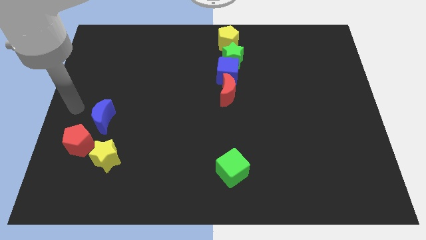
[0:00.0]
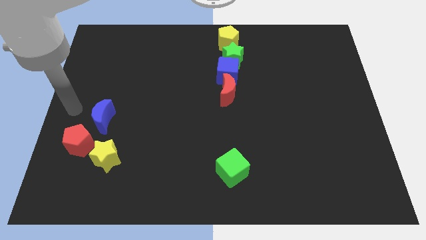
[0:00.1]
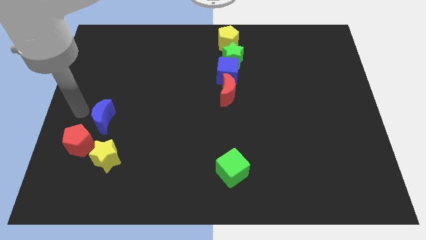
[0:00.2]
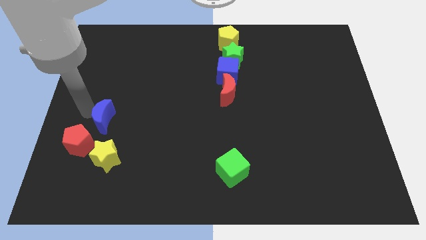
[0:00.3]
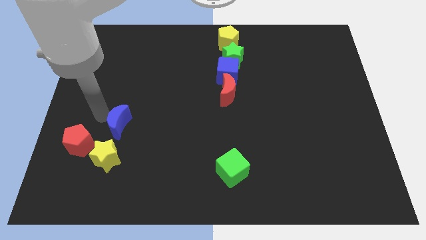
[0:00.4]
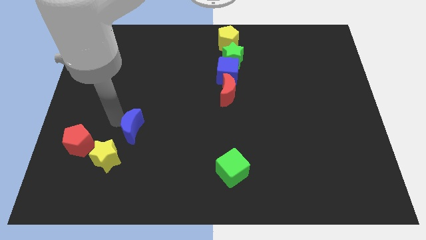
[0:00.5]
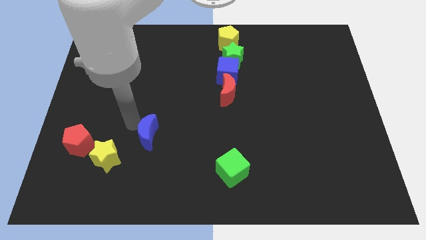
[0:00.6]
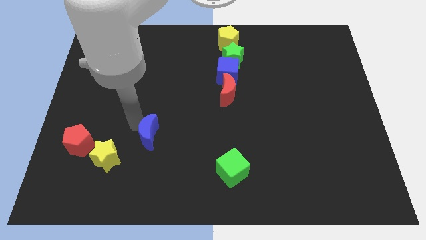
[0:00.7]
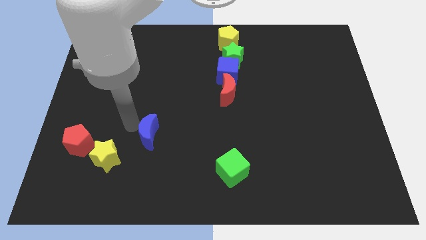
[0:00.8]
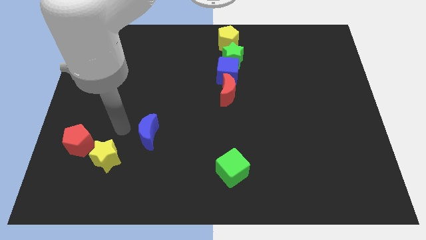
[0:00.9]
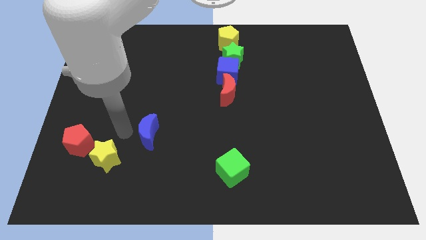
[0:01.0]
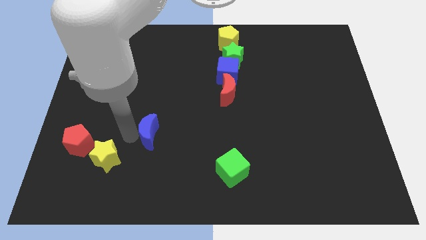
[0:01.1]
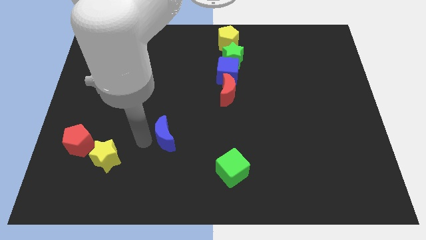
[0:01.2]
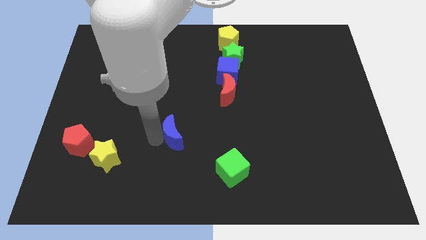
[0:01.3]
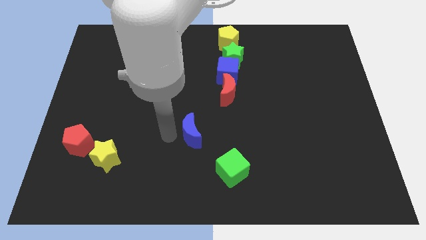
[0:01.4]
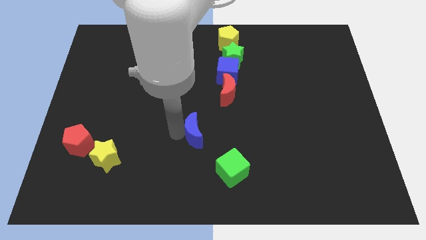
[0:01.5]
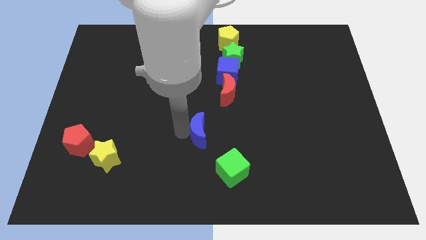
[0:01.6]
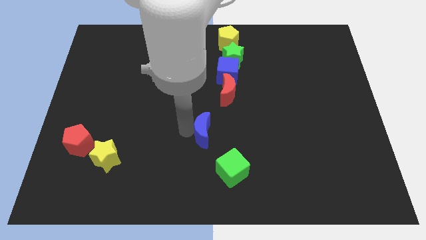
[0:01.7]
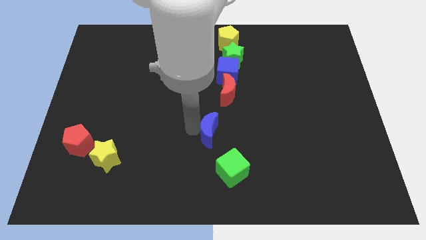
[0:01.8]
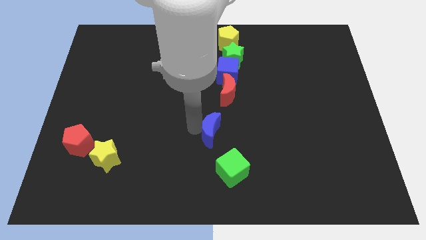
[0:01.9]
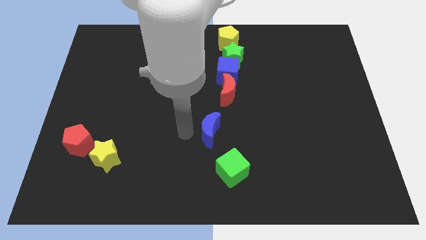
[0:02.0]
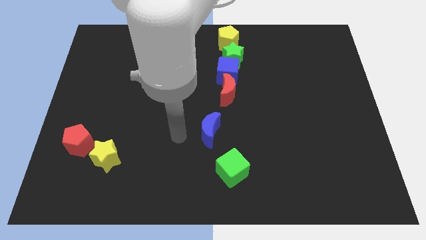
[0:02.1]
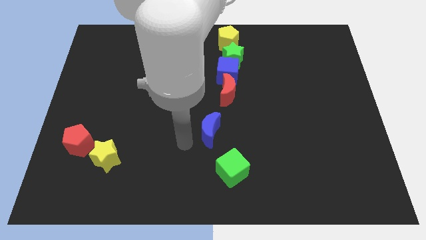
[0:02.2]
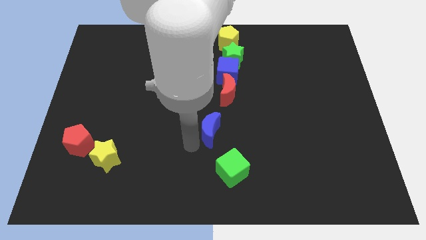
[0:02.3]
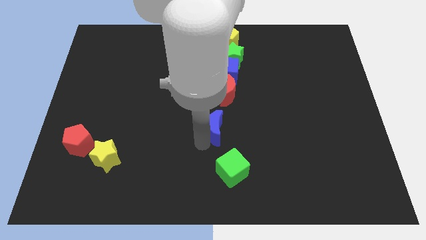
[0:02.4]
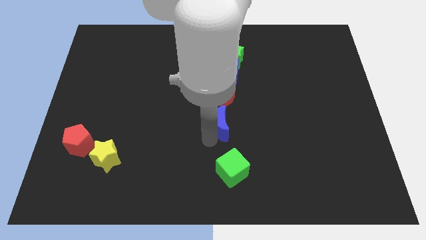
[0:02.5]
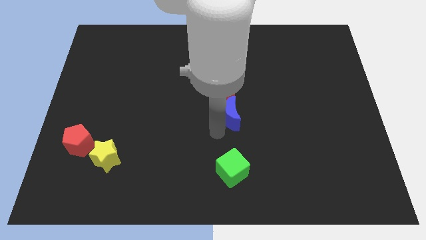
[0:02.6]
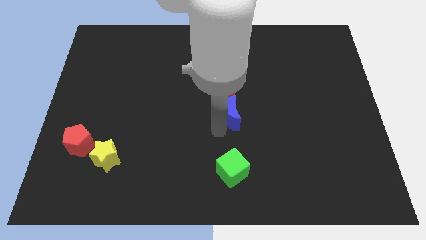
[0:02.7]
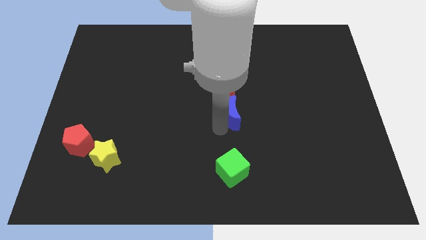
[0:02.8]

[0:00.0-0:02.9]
place the blue crescent below red moon

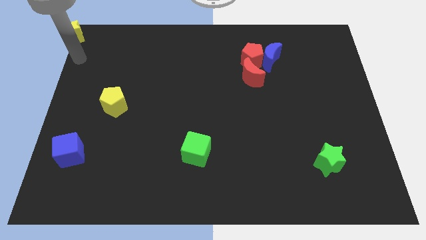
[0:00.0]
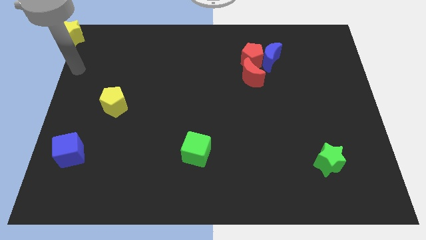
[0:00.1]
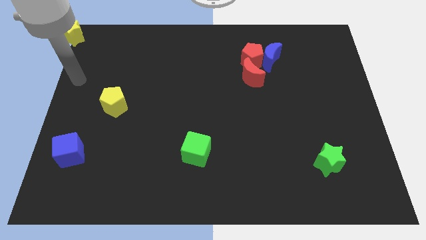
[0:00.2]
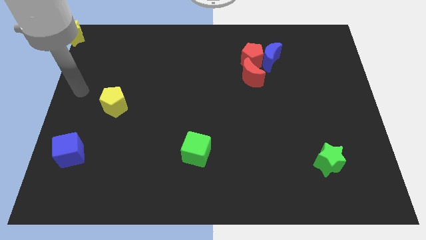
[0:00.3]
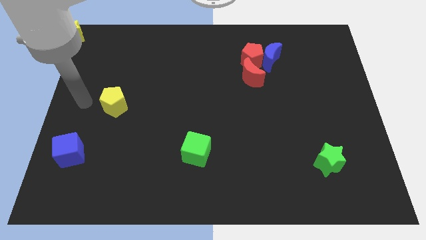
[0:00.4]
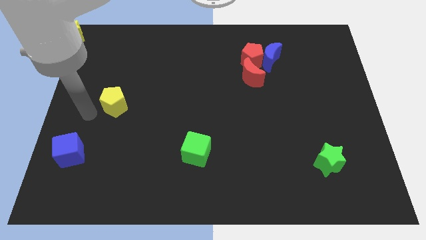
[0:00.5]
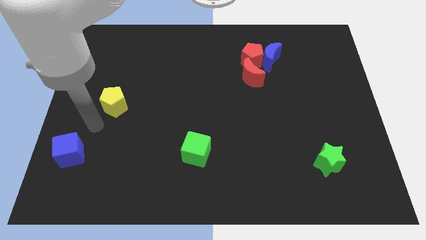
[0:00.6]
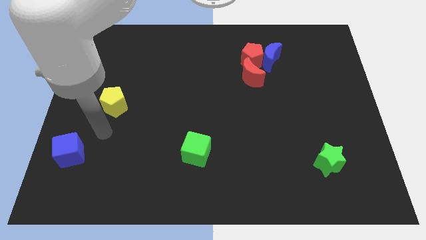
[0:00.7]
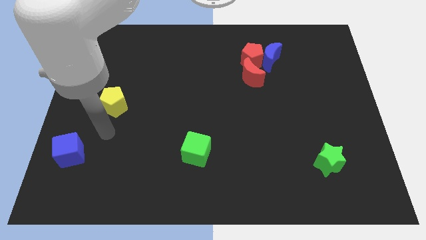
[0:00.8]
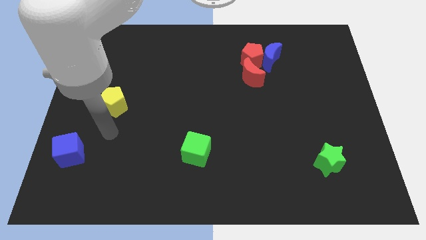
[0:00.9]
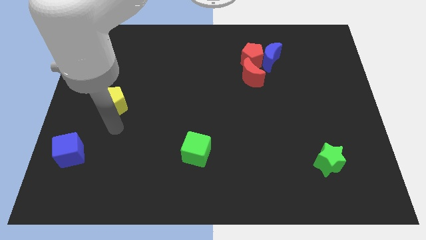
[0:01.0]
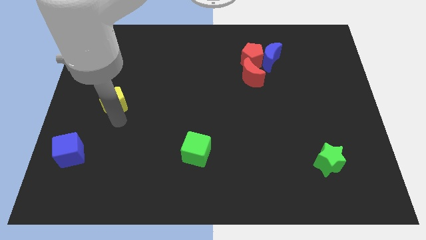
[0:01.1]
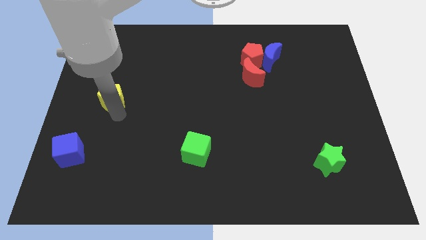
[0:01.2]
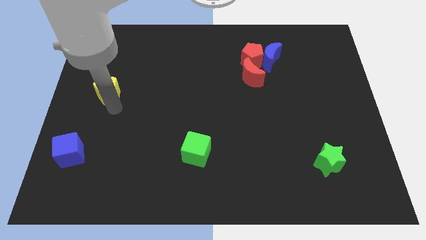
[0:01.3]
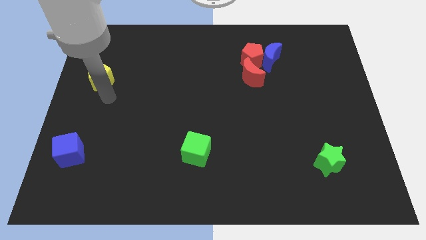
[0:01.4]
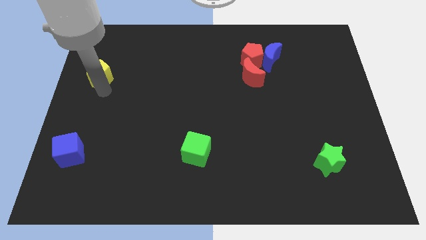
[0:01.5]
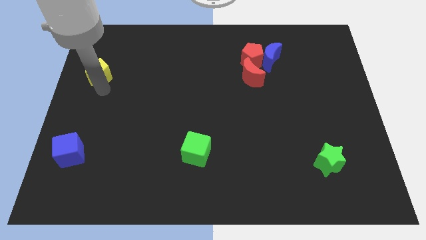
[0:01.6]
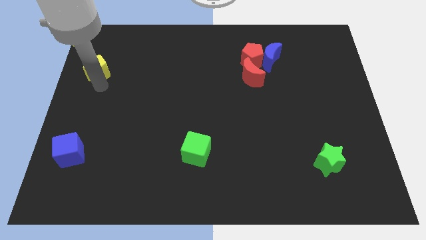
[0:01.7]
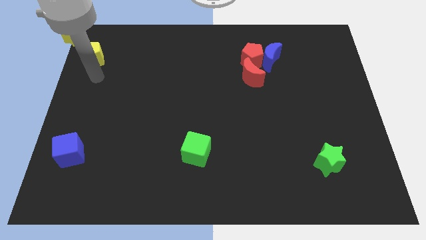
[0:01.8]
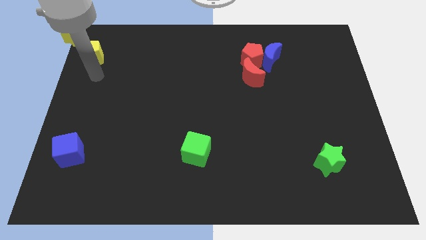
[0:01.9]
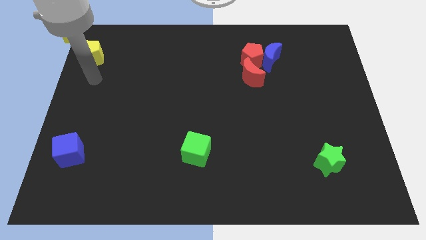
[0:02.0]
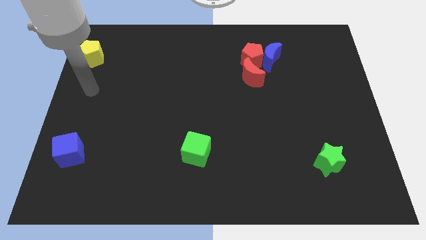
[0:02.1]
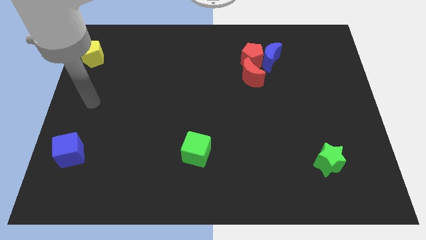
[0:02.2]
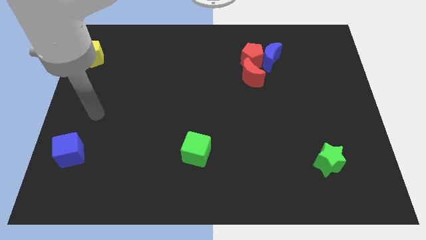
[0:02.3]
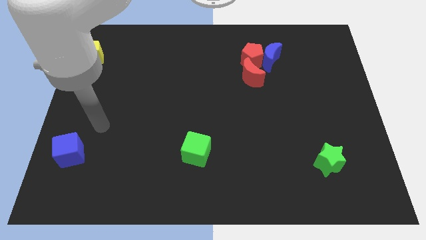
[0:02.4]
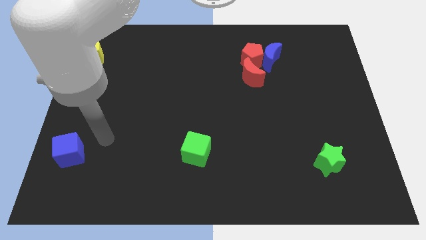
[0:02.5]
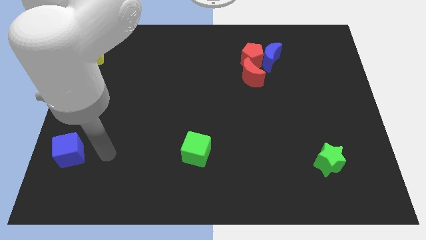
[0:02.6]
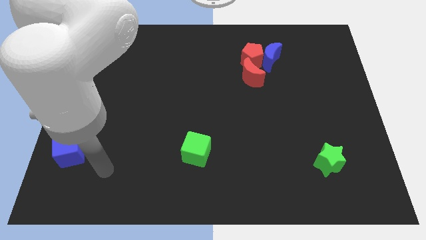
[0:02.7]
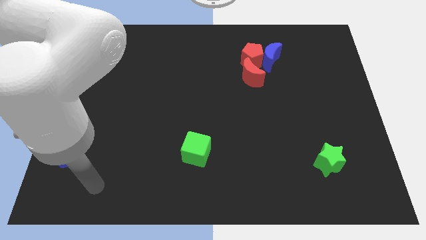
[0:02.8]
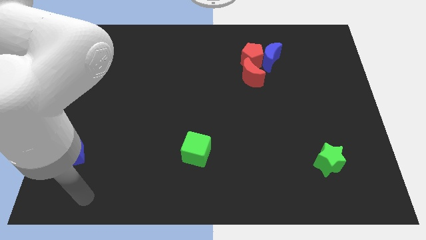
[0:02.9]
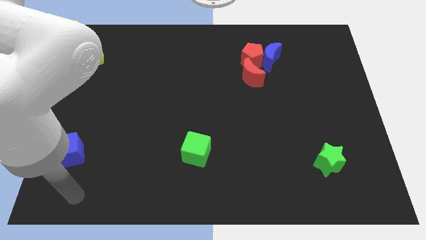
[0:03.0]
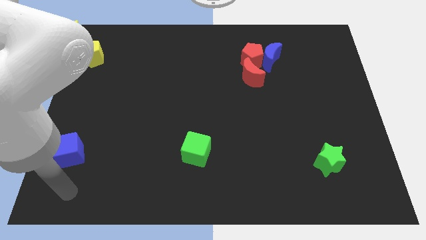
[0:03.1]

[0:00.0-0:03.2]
move the yellow pentagon slightly towards the yellow star

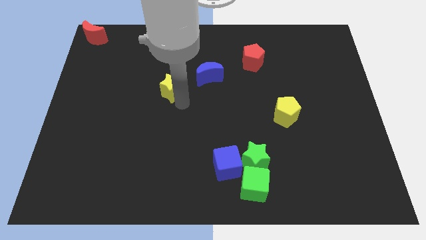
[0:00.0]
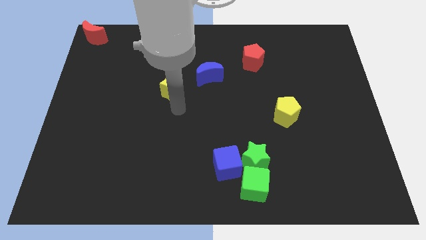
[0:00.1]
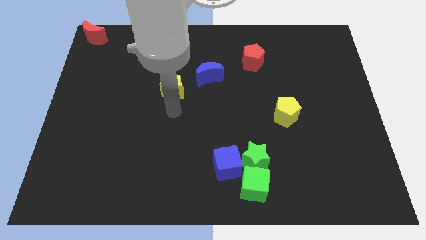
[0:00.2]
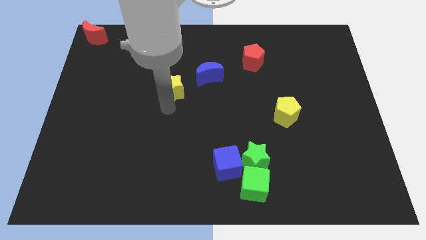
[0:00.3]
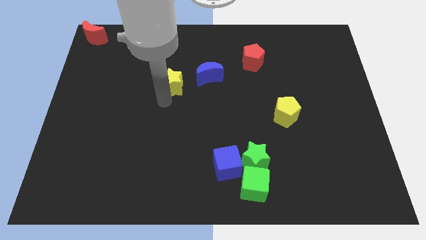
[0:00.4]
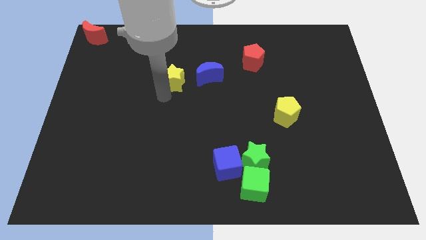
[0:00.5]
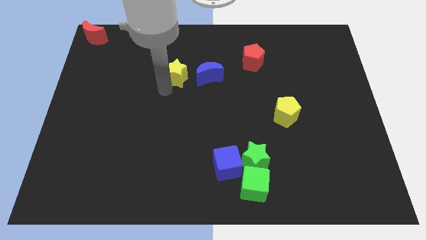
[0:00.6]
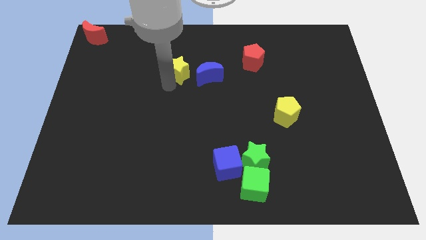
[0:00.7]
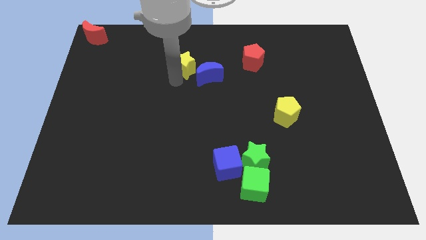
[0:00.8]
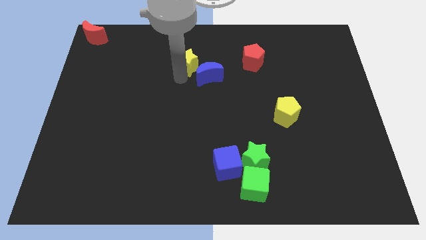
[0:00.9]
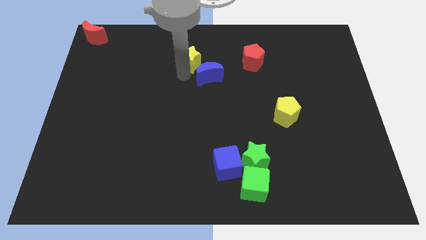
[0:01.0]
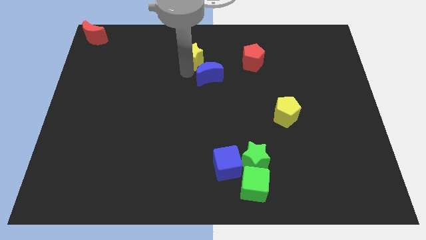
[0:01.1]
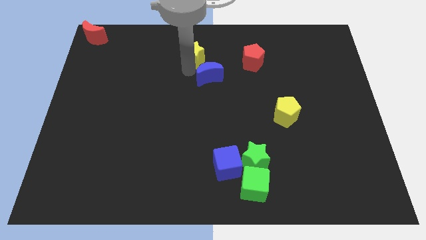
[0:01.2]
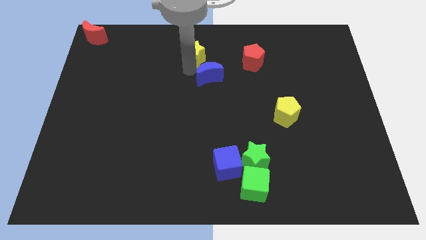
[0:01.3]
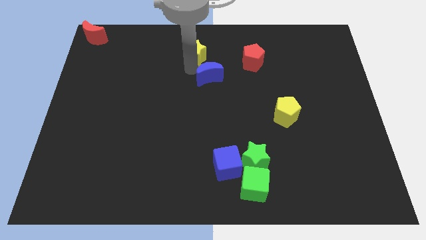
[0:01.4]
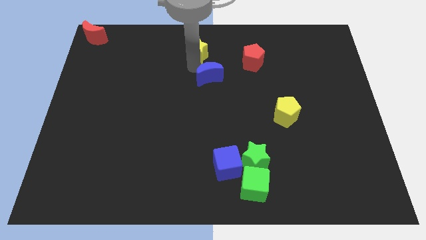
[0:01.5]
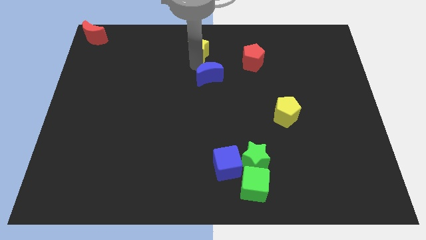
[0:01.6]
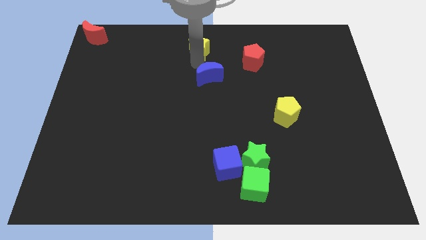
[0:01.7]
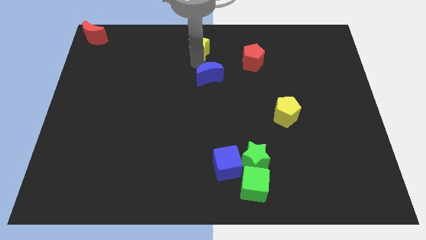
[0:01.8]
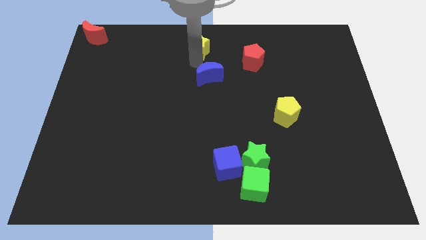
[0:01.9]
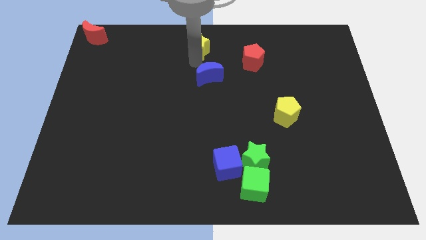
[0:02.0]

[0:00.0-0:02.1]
push yellow star above blue moon

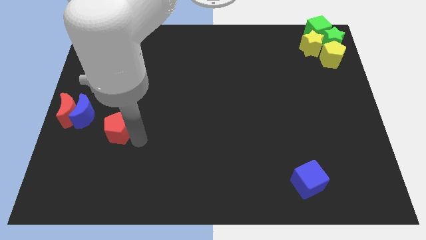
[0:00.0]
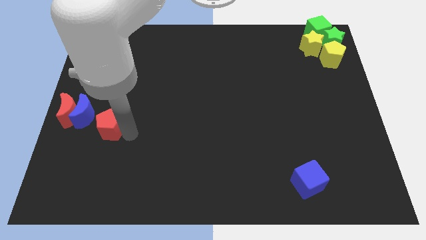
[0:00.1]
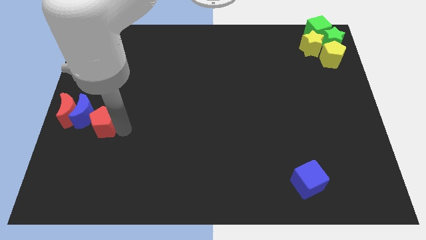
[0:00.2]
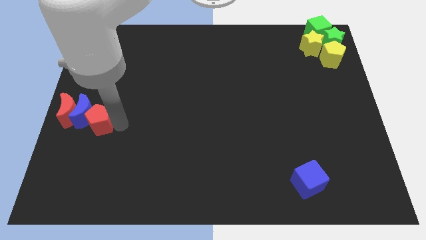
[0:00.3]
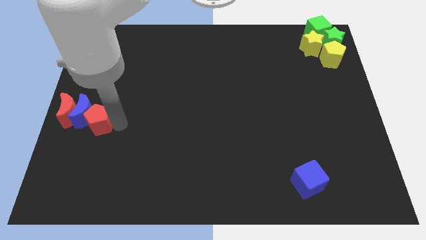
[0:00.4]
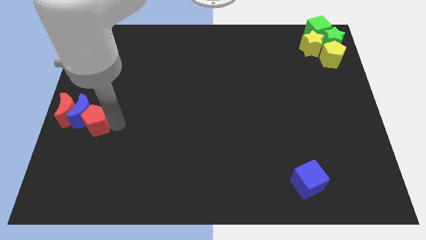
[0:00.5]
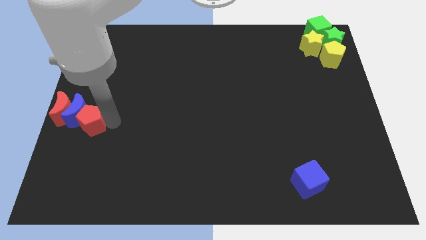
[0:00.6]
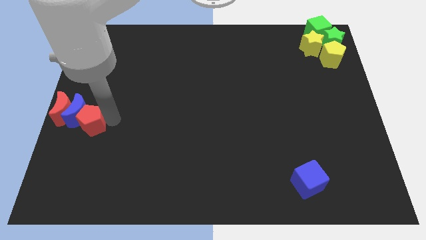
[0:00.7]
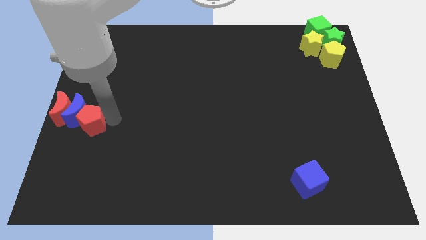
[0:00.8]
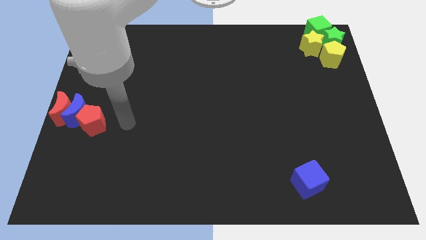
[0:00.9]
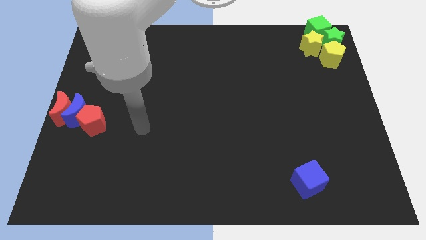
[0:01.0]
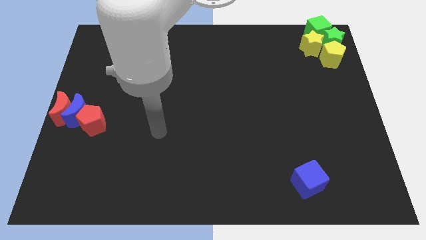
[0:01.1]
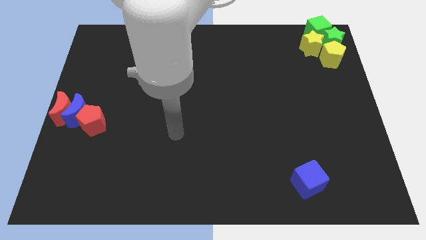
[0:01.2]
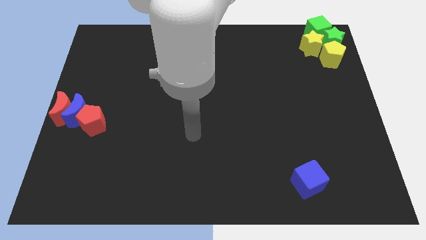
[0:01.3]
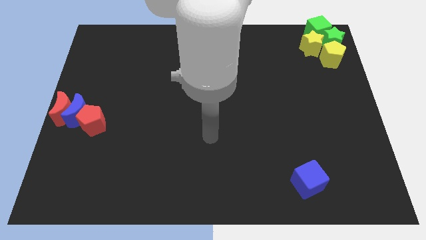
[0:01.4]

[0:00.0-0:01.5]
push the red pentagon into the blue crescent
